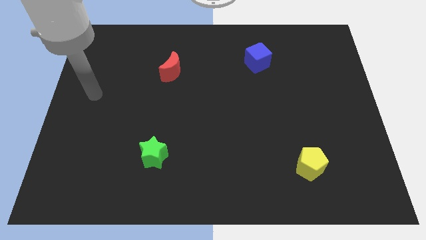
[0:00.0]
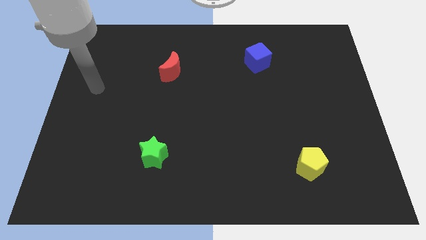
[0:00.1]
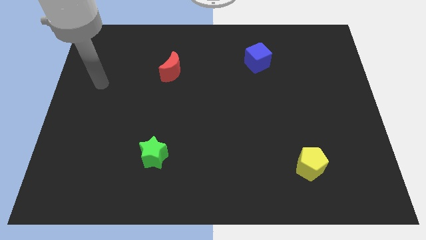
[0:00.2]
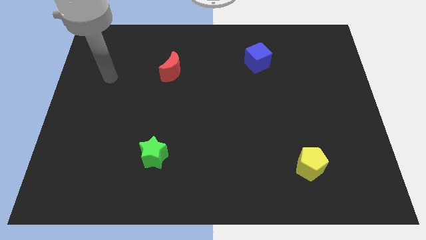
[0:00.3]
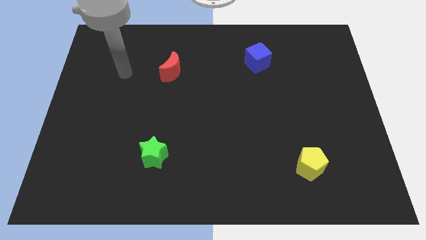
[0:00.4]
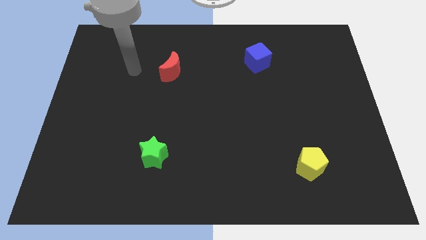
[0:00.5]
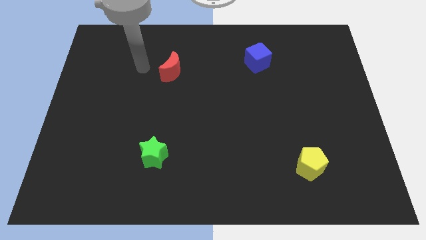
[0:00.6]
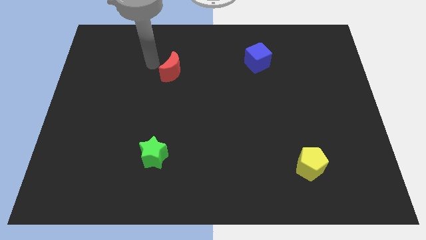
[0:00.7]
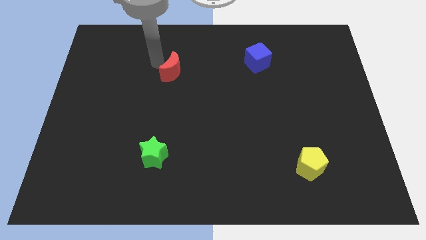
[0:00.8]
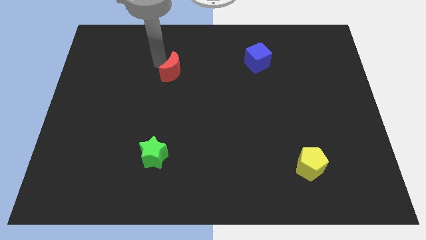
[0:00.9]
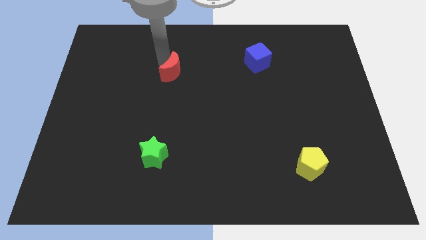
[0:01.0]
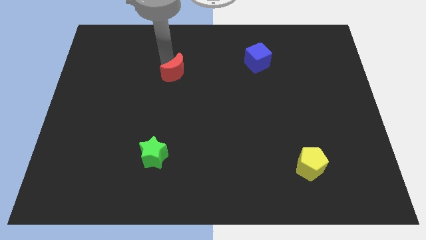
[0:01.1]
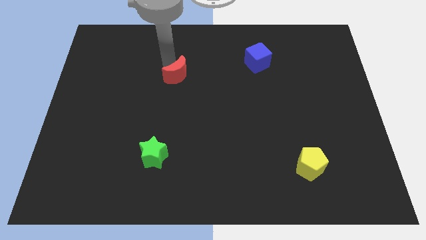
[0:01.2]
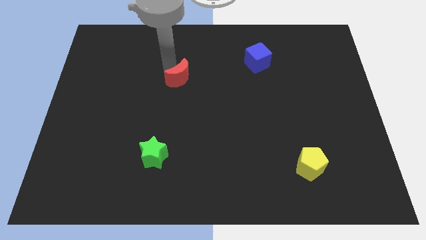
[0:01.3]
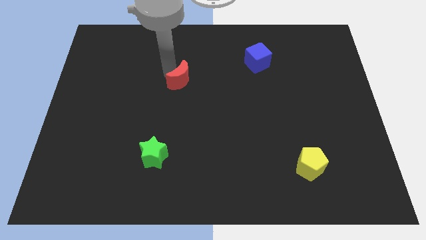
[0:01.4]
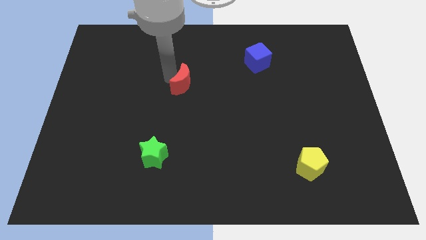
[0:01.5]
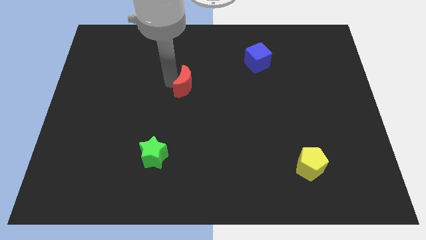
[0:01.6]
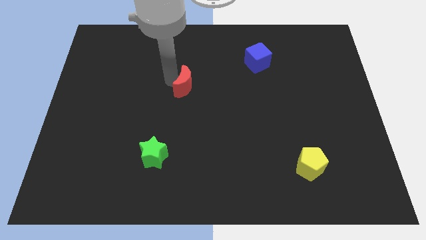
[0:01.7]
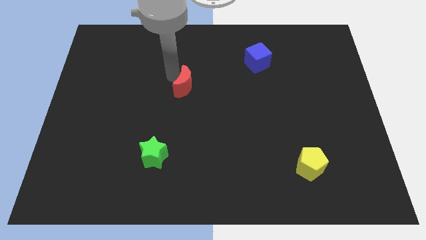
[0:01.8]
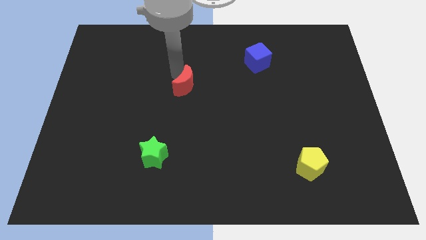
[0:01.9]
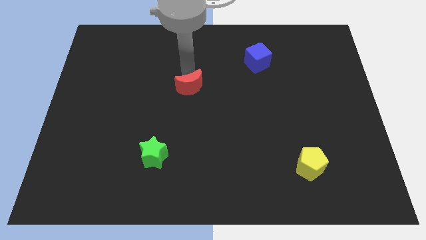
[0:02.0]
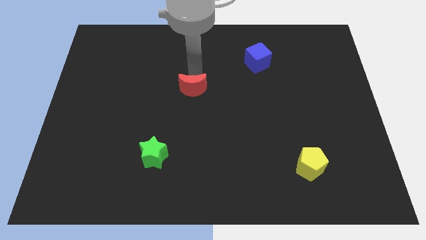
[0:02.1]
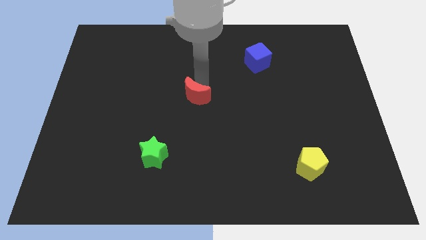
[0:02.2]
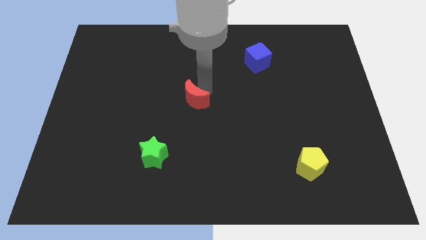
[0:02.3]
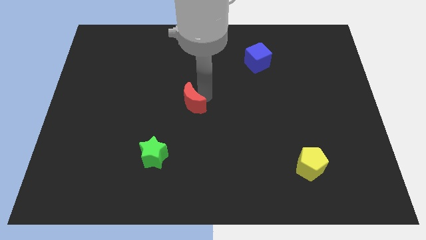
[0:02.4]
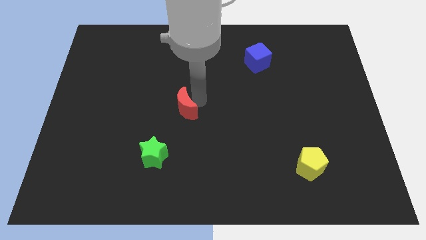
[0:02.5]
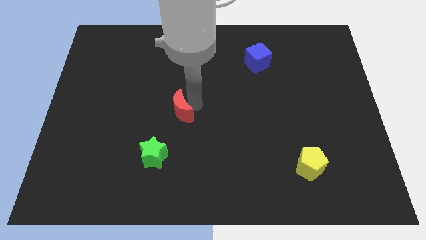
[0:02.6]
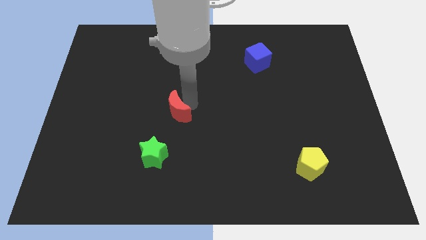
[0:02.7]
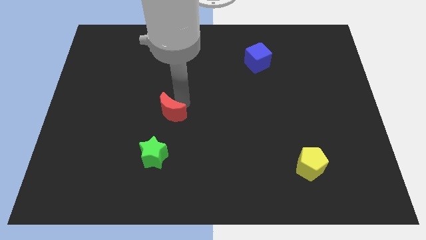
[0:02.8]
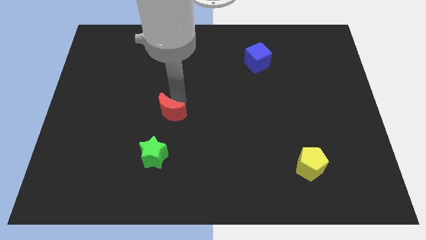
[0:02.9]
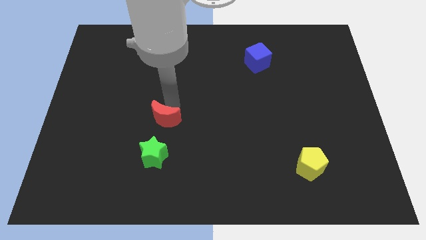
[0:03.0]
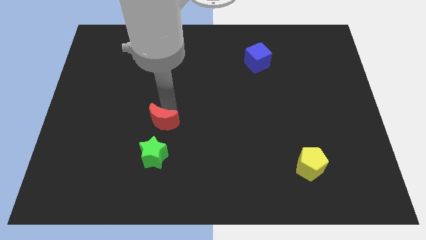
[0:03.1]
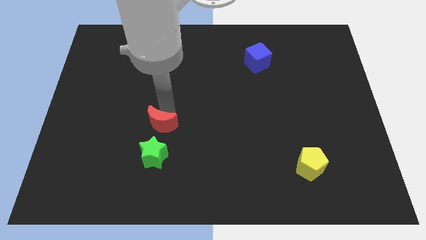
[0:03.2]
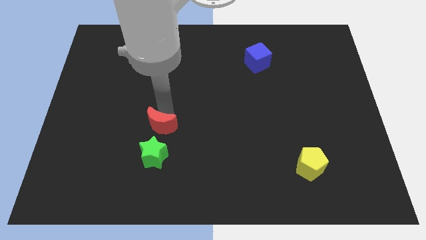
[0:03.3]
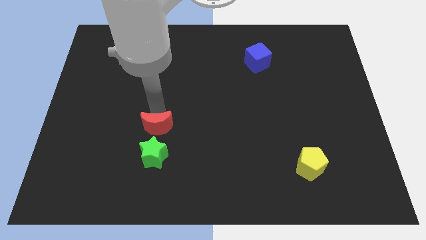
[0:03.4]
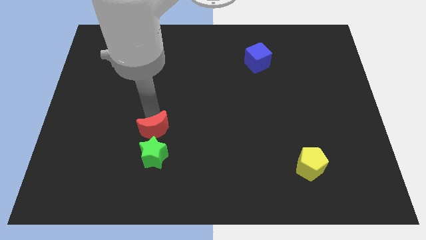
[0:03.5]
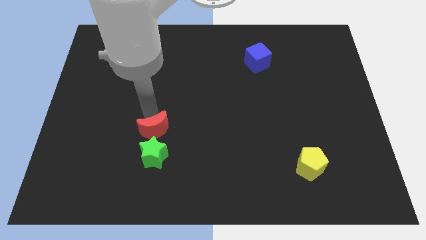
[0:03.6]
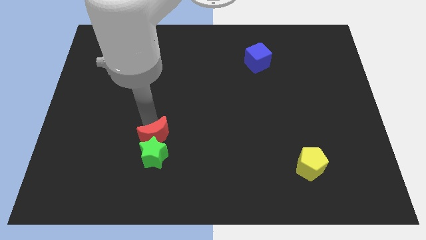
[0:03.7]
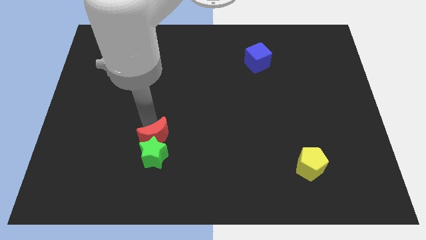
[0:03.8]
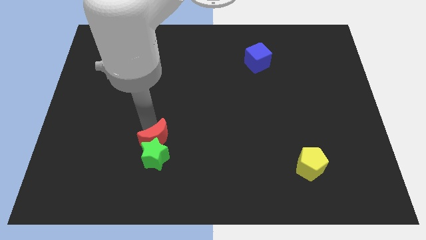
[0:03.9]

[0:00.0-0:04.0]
move the moon towards the green block

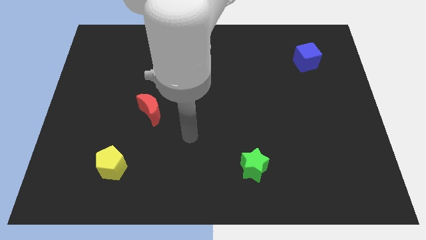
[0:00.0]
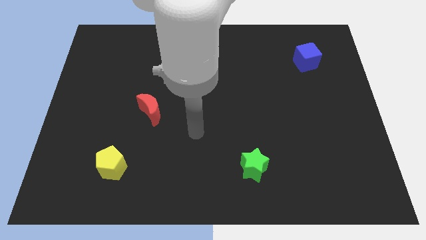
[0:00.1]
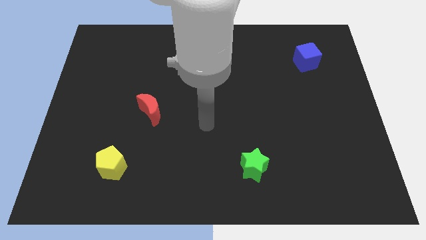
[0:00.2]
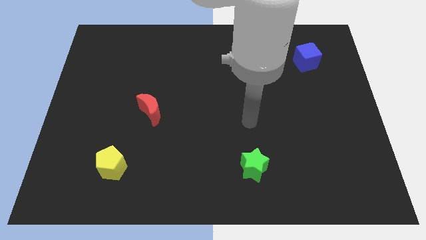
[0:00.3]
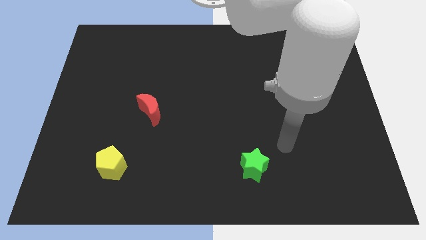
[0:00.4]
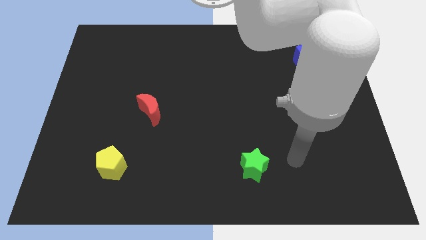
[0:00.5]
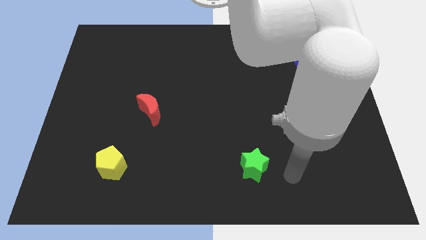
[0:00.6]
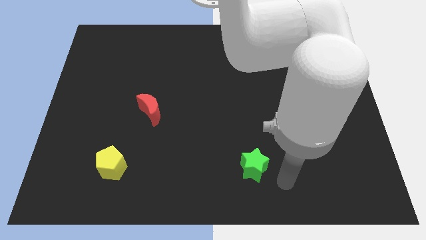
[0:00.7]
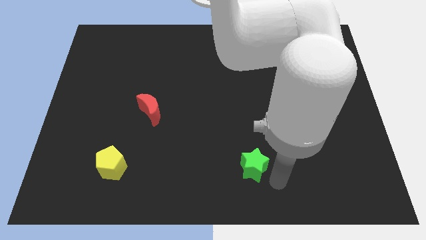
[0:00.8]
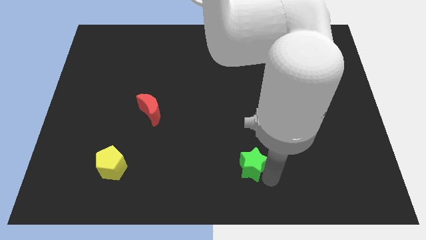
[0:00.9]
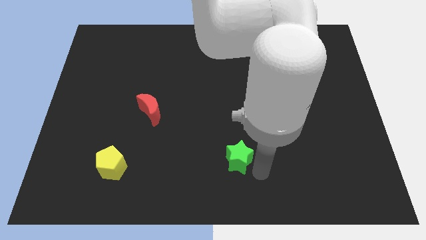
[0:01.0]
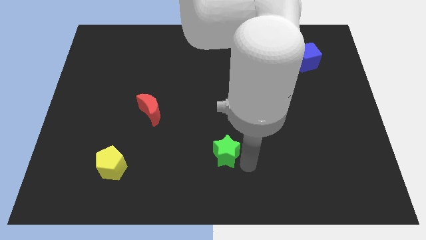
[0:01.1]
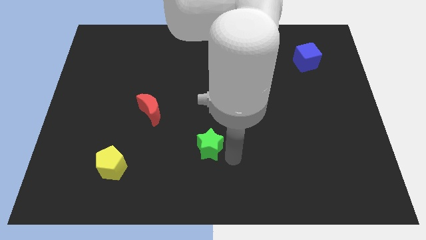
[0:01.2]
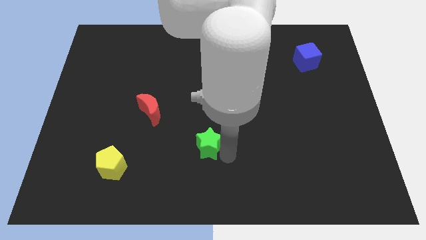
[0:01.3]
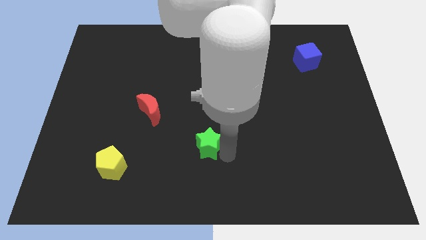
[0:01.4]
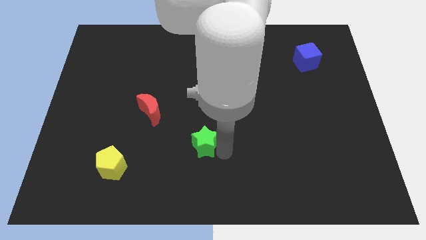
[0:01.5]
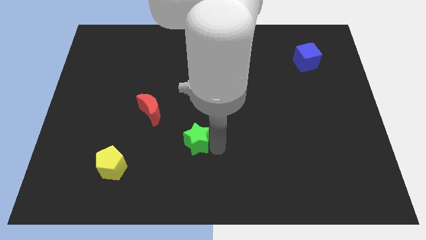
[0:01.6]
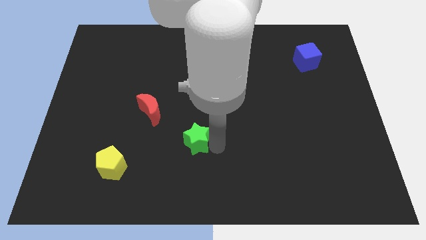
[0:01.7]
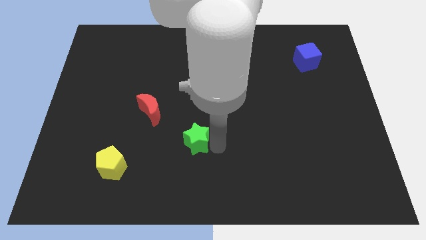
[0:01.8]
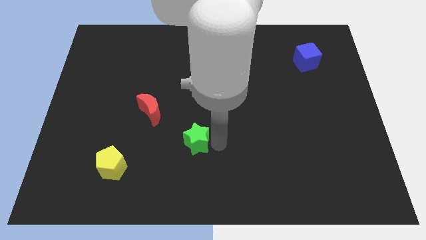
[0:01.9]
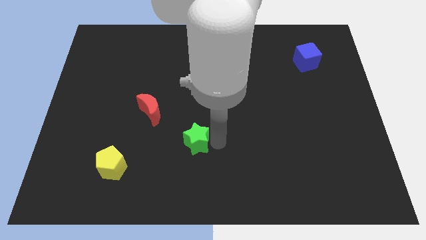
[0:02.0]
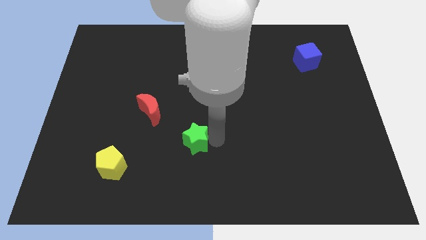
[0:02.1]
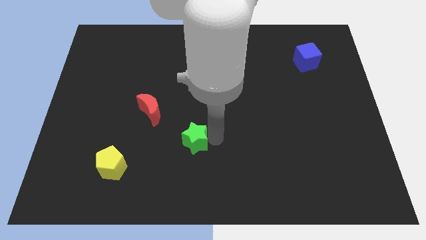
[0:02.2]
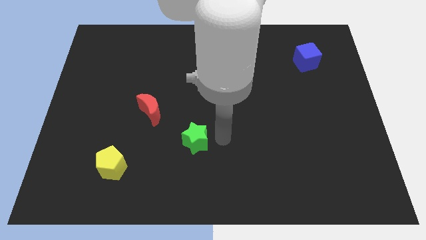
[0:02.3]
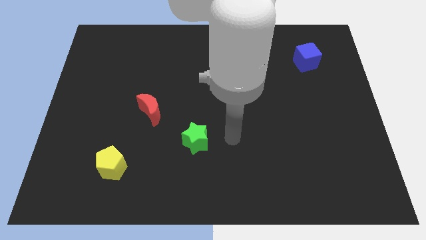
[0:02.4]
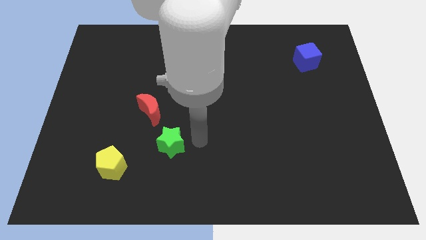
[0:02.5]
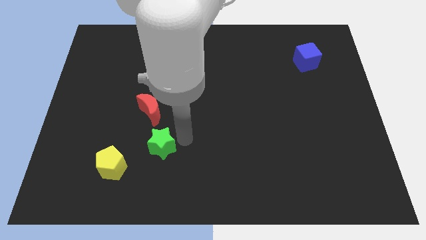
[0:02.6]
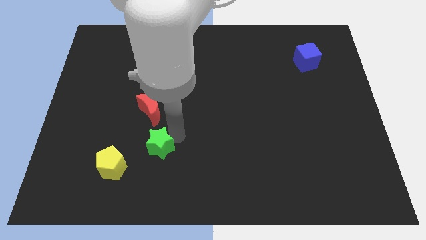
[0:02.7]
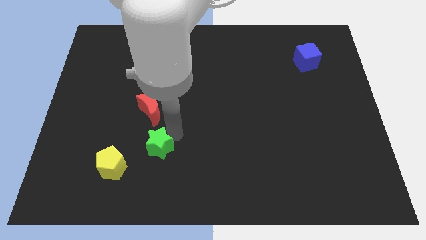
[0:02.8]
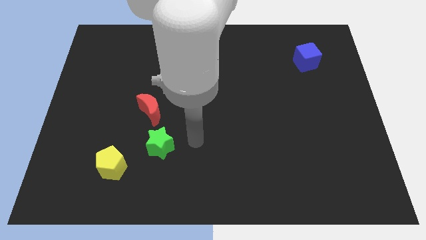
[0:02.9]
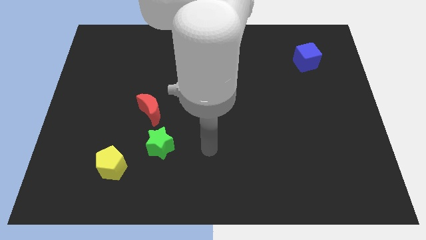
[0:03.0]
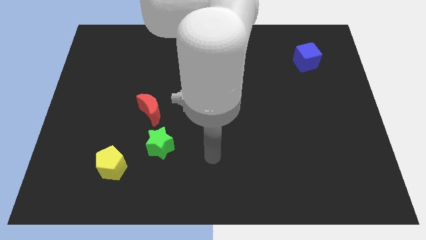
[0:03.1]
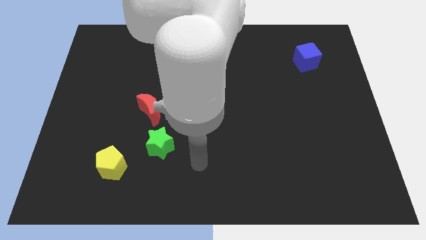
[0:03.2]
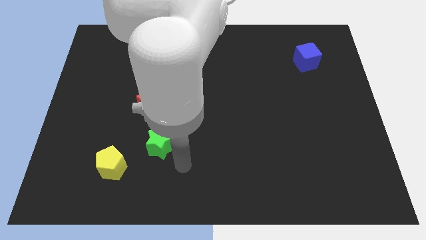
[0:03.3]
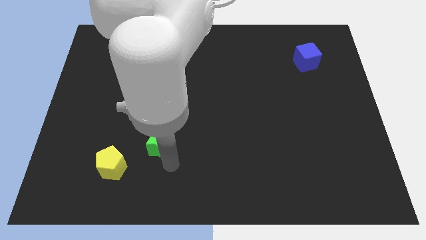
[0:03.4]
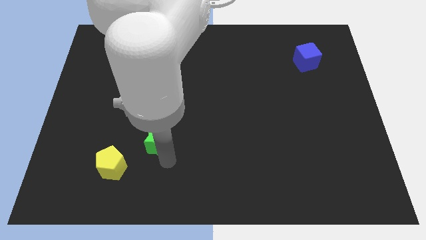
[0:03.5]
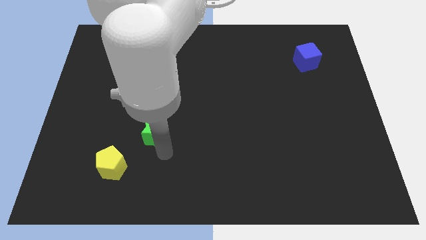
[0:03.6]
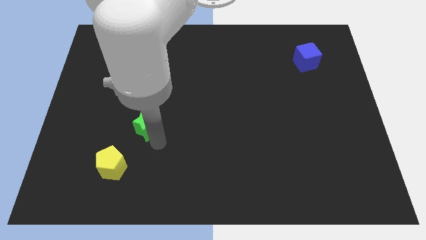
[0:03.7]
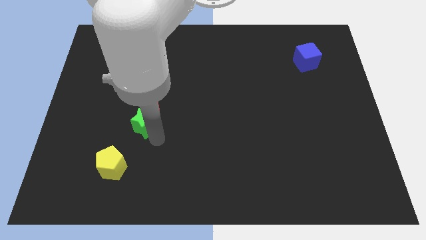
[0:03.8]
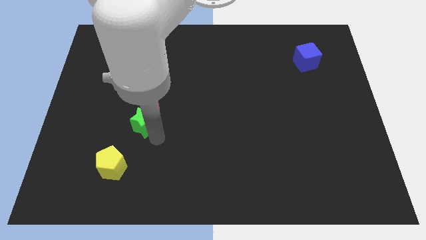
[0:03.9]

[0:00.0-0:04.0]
push the green star to the red moon

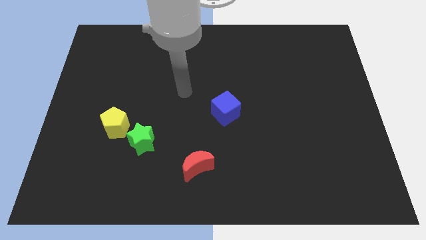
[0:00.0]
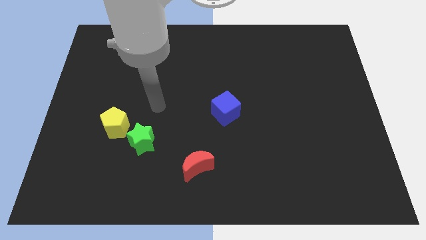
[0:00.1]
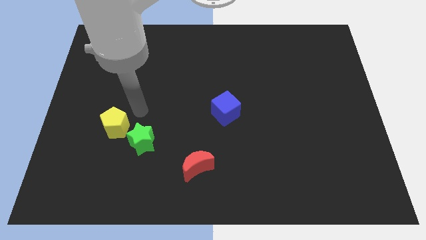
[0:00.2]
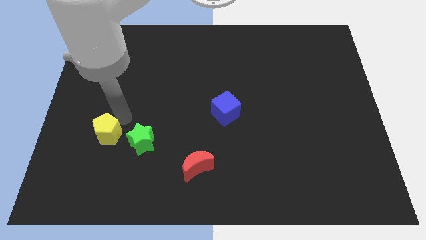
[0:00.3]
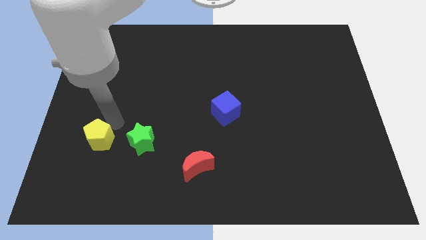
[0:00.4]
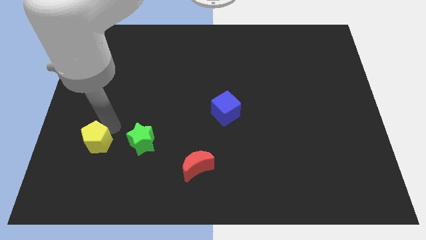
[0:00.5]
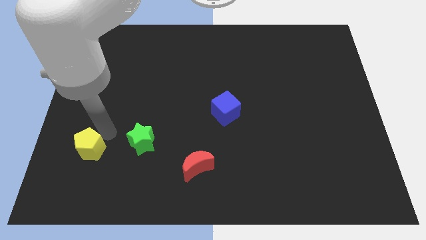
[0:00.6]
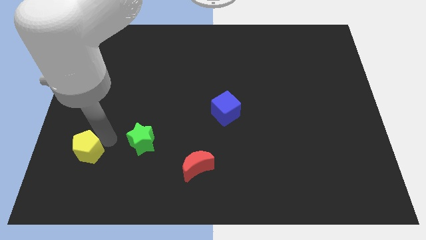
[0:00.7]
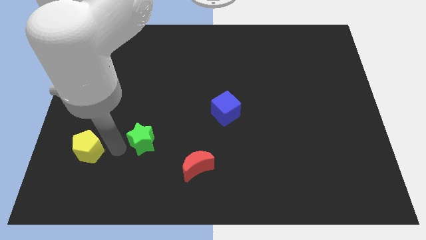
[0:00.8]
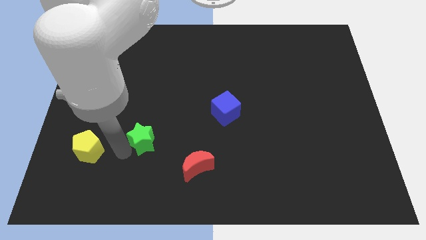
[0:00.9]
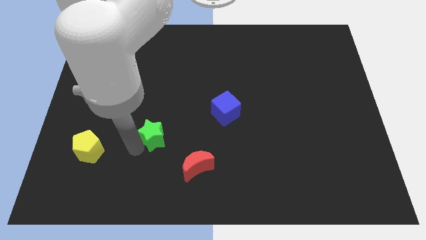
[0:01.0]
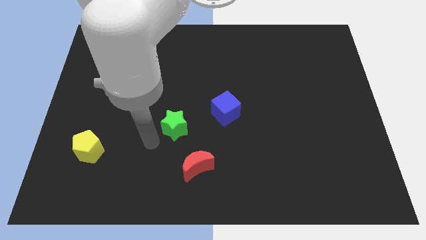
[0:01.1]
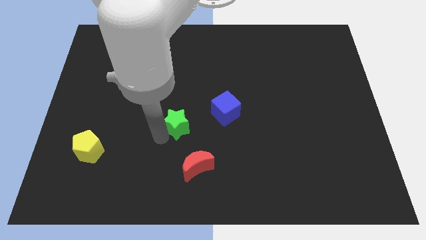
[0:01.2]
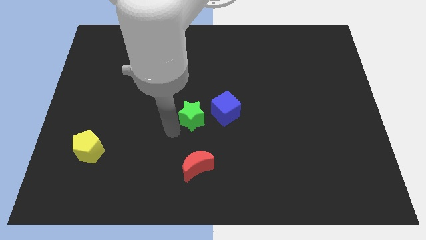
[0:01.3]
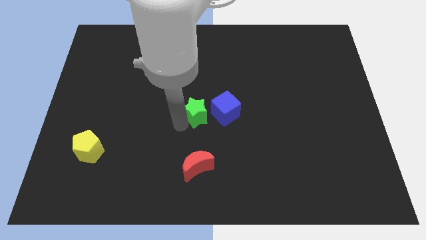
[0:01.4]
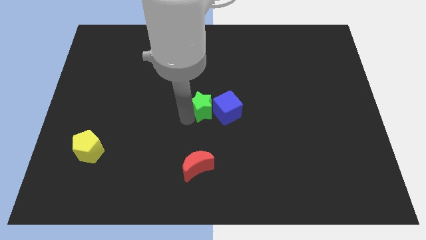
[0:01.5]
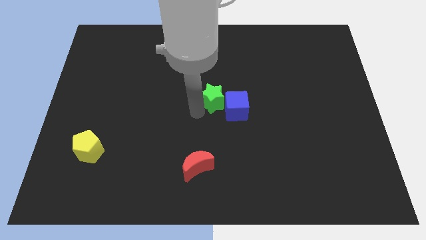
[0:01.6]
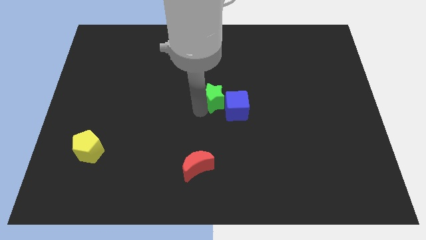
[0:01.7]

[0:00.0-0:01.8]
slide the green block towards the blue block
